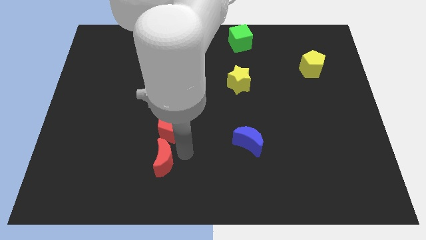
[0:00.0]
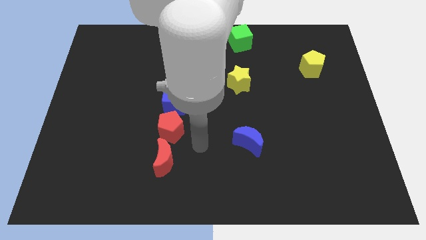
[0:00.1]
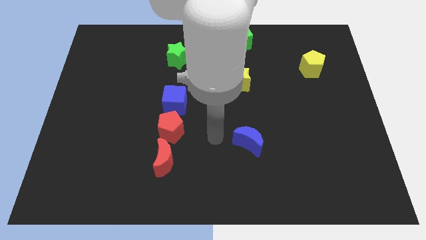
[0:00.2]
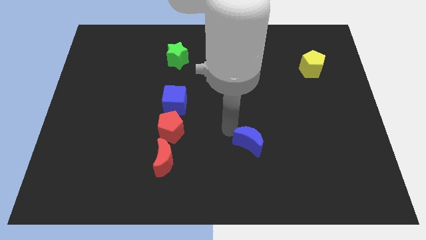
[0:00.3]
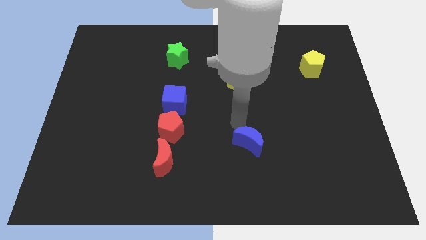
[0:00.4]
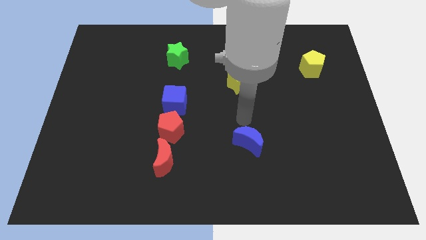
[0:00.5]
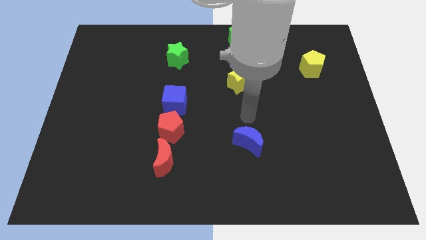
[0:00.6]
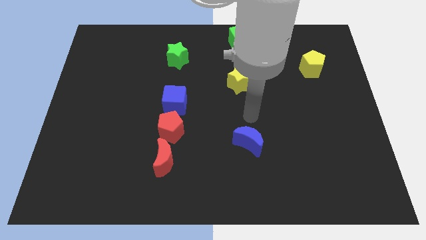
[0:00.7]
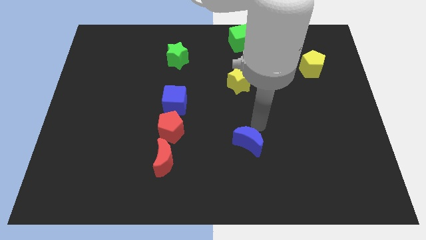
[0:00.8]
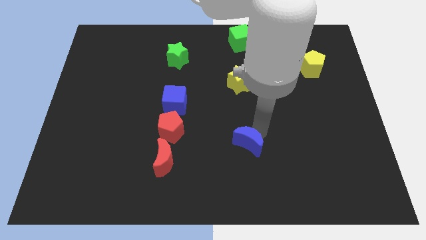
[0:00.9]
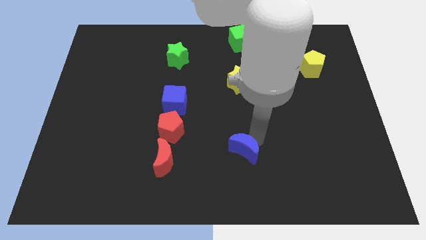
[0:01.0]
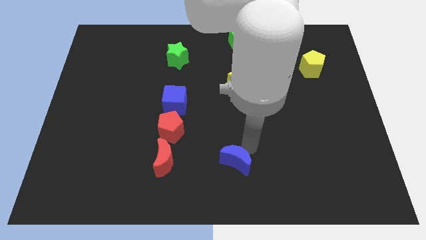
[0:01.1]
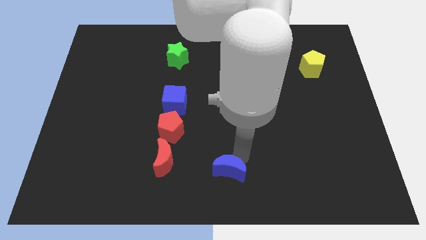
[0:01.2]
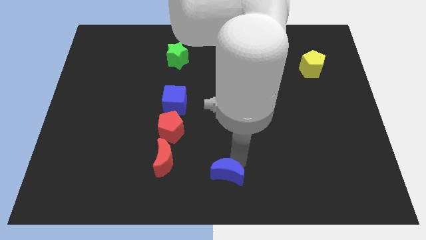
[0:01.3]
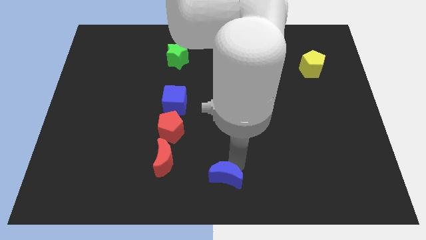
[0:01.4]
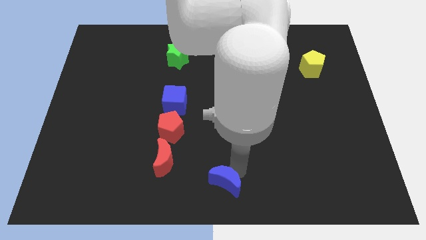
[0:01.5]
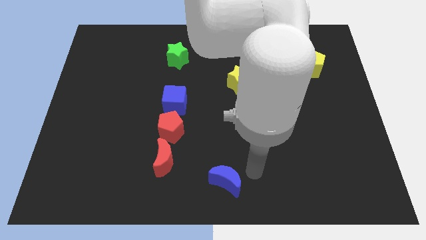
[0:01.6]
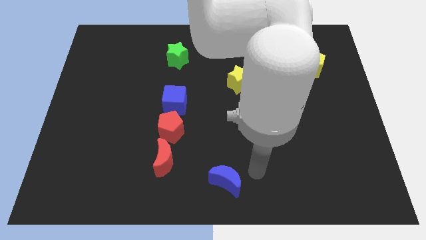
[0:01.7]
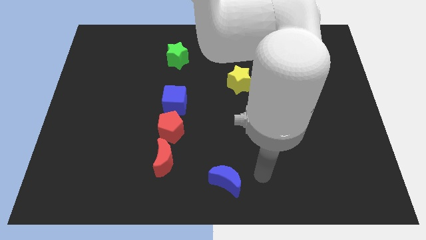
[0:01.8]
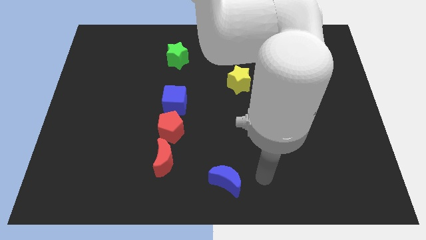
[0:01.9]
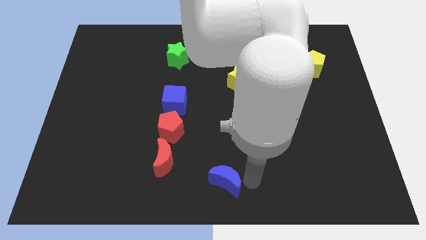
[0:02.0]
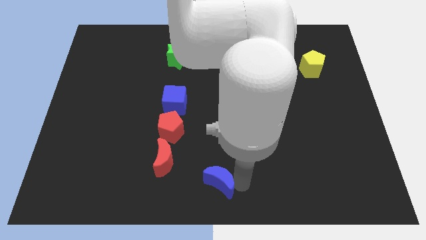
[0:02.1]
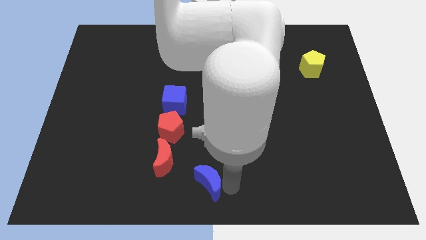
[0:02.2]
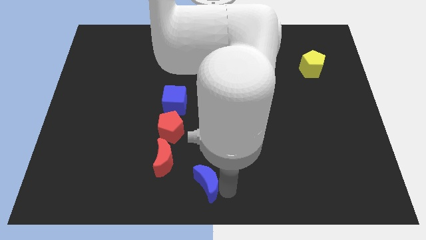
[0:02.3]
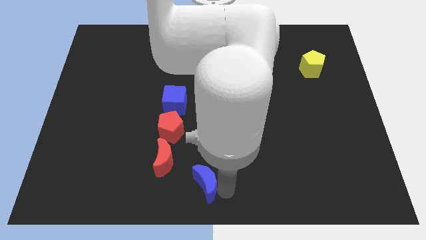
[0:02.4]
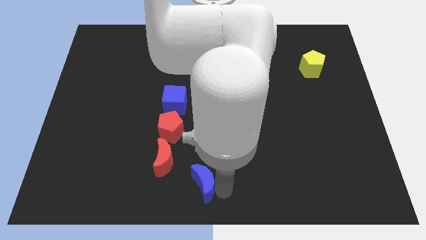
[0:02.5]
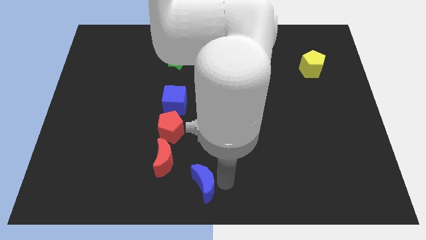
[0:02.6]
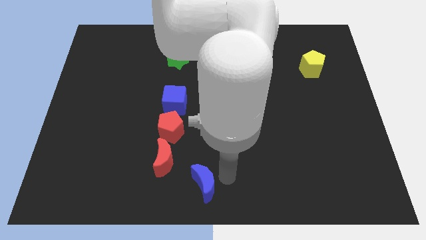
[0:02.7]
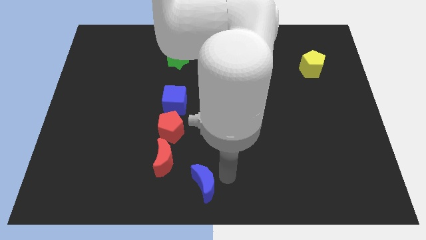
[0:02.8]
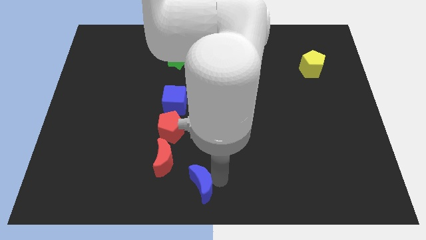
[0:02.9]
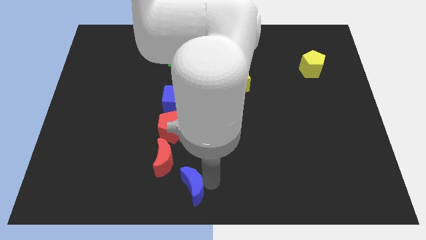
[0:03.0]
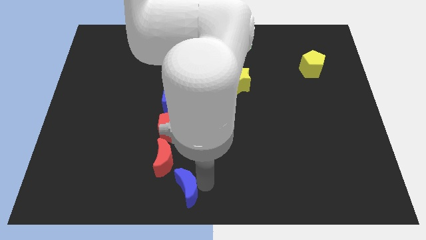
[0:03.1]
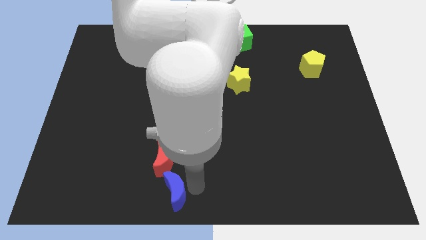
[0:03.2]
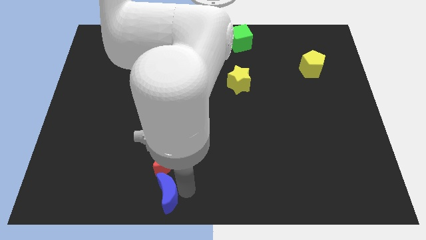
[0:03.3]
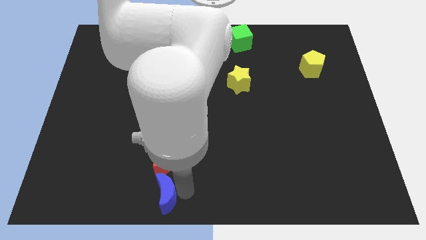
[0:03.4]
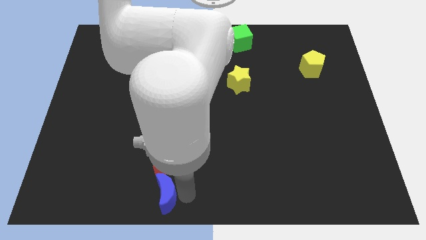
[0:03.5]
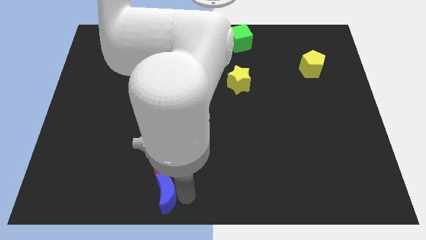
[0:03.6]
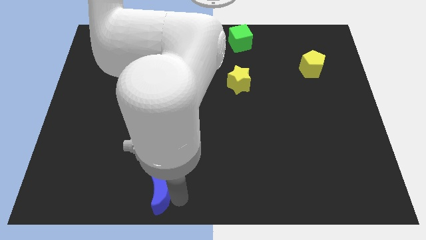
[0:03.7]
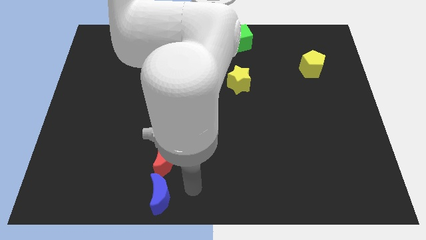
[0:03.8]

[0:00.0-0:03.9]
push the blue crescent to the bottom side of the red crescent

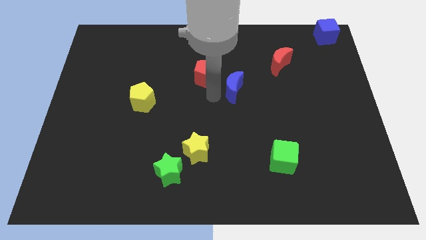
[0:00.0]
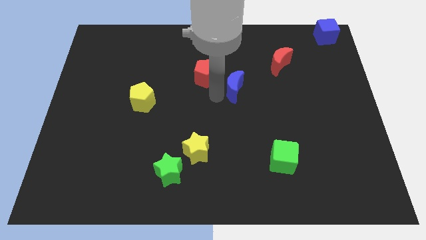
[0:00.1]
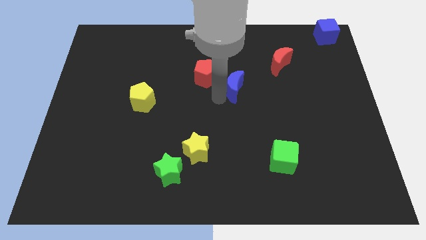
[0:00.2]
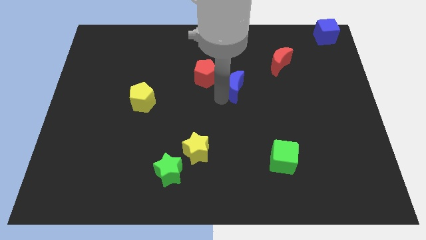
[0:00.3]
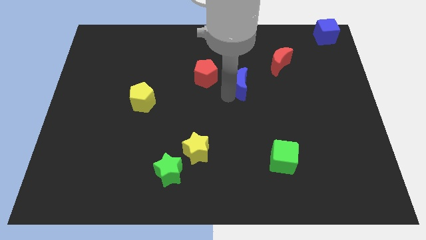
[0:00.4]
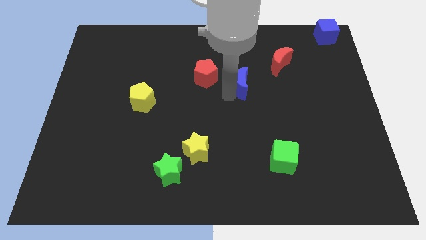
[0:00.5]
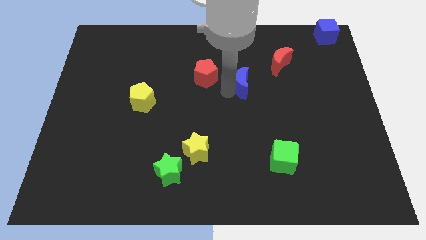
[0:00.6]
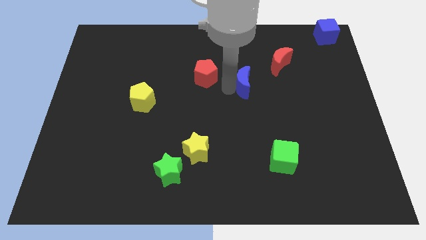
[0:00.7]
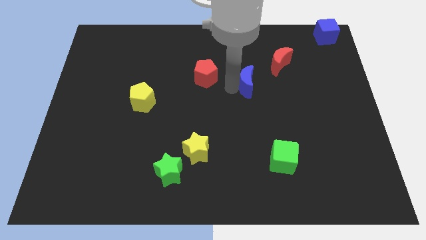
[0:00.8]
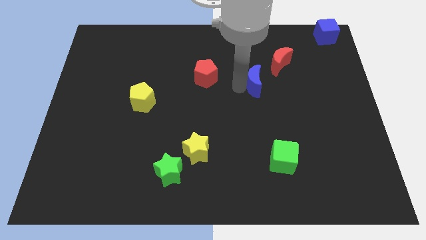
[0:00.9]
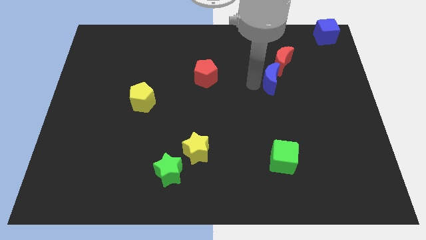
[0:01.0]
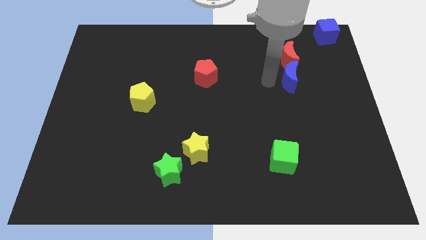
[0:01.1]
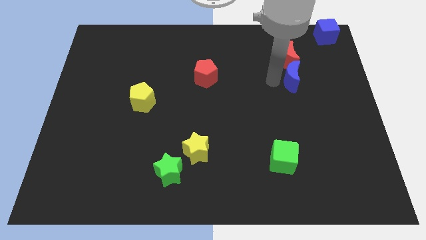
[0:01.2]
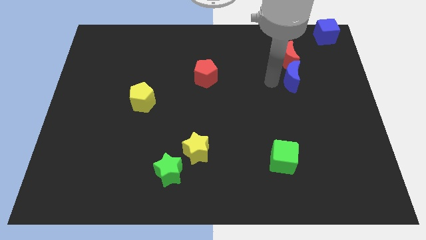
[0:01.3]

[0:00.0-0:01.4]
place the blue moon down to the red moon

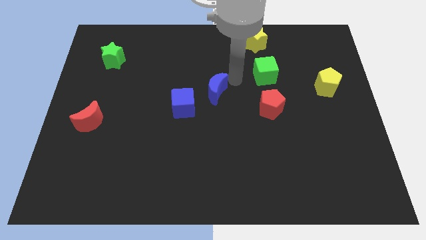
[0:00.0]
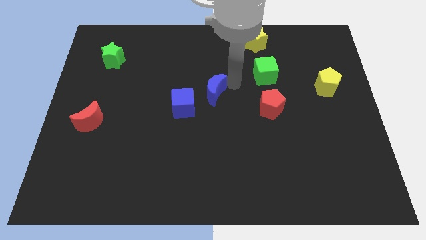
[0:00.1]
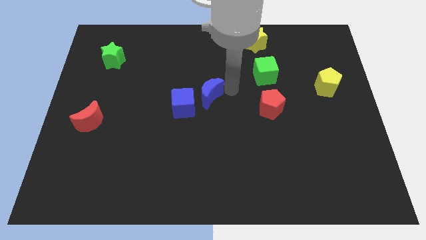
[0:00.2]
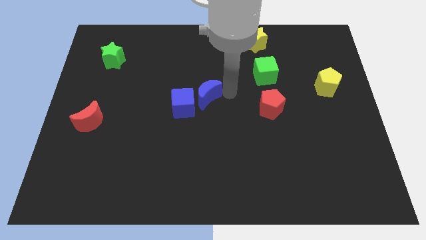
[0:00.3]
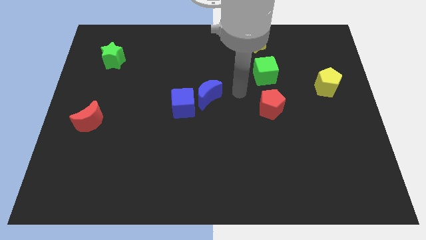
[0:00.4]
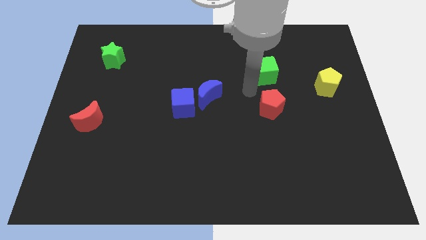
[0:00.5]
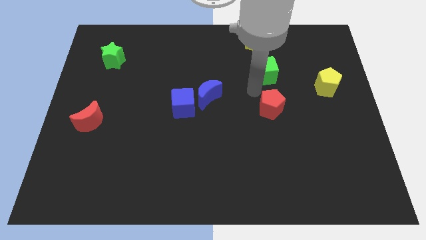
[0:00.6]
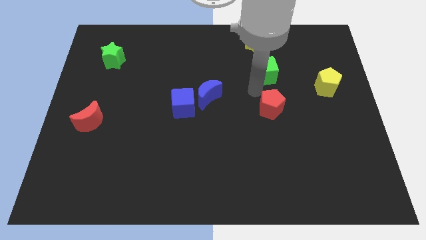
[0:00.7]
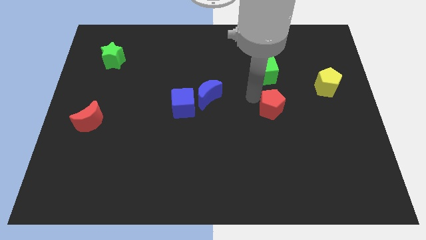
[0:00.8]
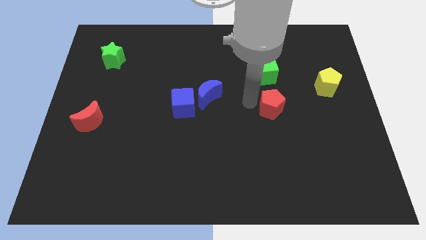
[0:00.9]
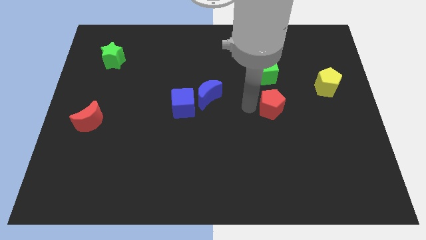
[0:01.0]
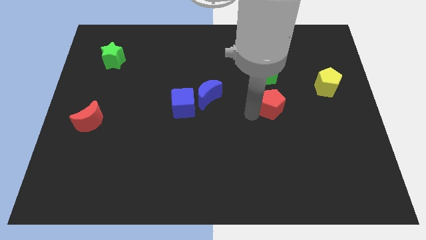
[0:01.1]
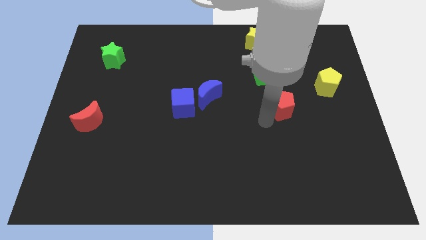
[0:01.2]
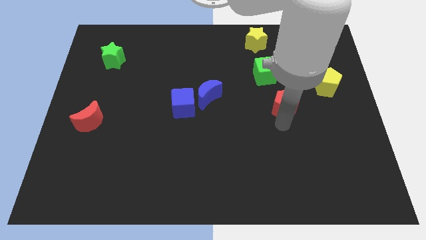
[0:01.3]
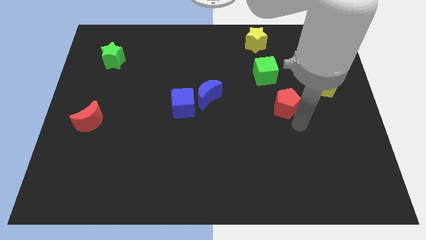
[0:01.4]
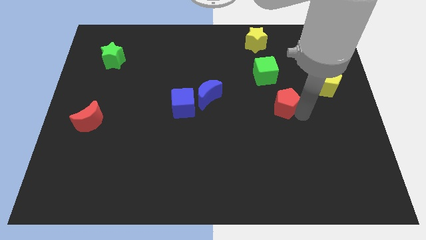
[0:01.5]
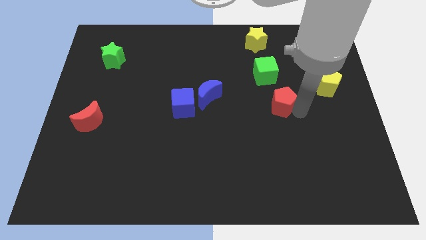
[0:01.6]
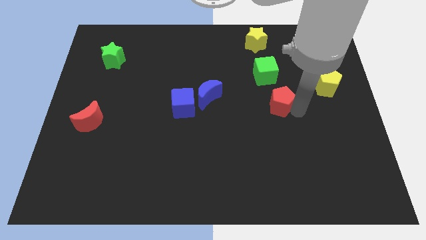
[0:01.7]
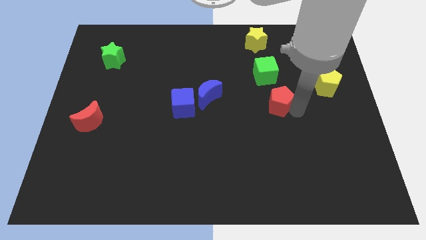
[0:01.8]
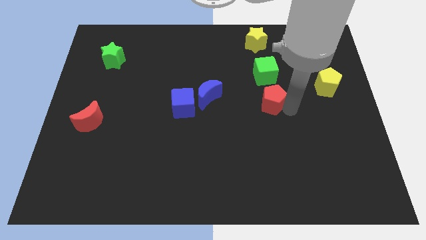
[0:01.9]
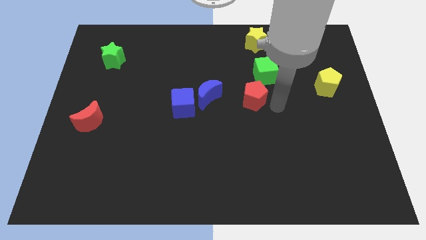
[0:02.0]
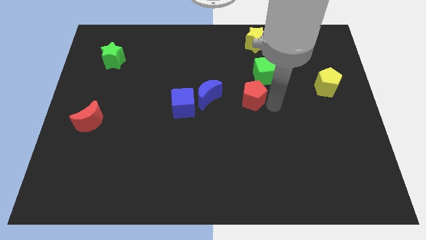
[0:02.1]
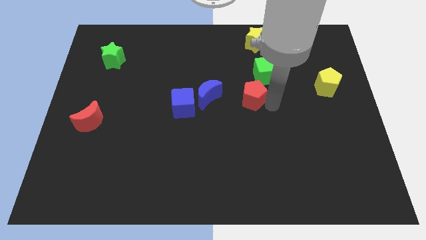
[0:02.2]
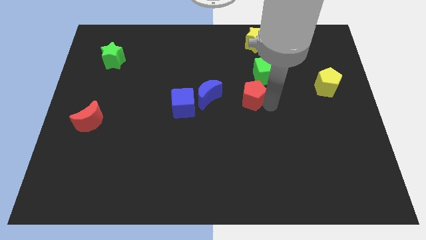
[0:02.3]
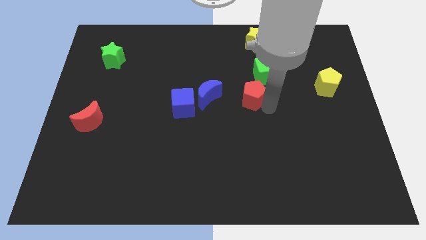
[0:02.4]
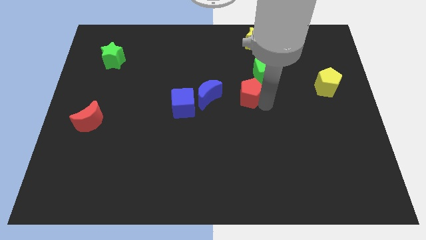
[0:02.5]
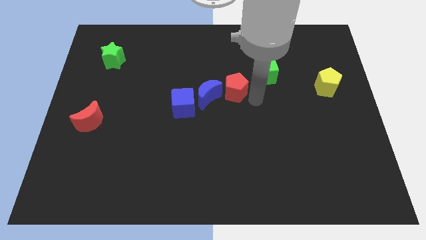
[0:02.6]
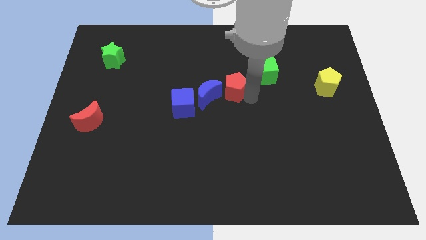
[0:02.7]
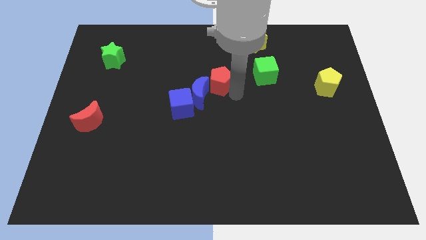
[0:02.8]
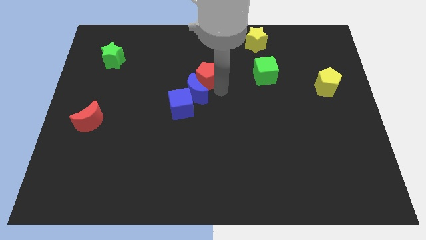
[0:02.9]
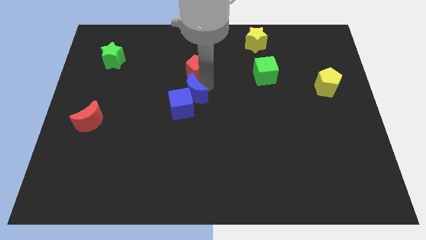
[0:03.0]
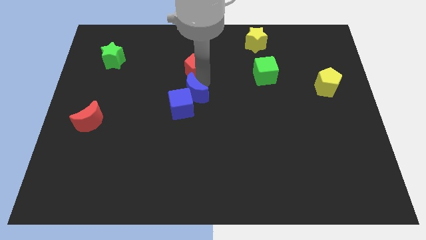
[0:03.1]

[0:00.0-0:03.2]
move the red pentagon above the blue crescent

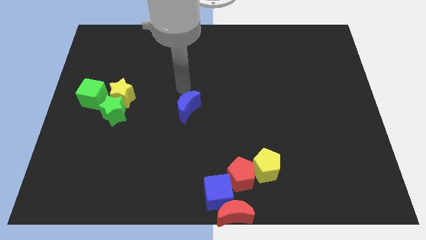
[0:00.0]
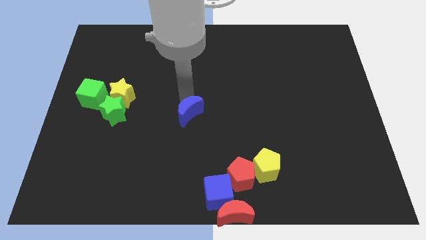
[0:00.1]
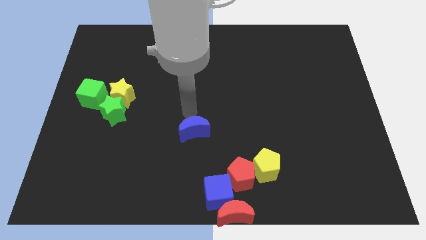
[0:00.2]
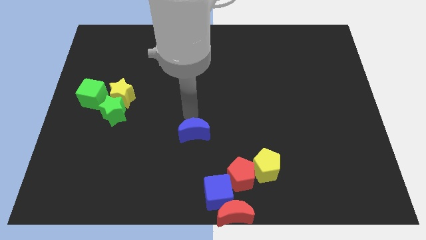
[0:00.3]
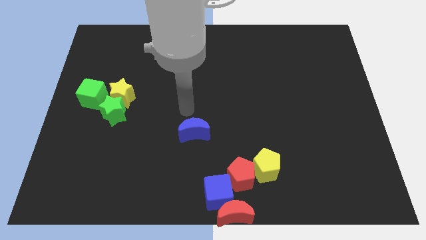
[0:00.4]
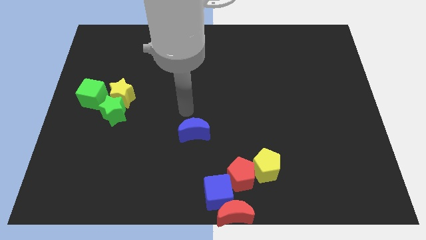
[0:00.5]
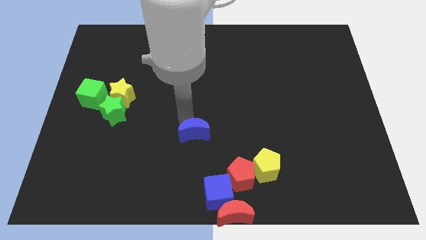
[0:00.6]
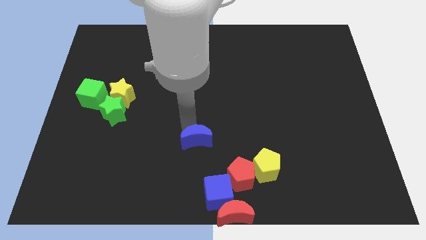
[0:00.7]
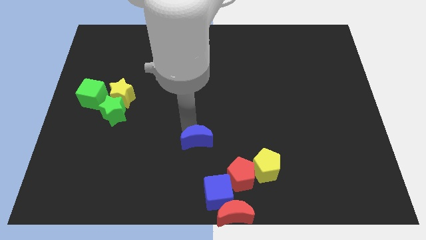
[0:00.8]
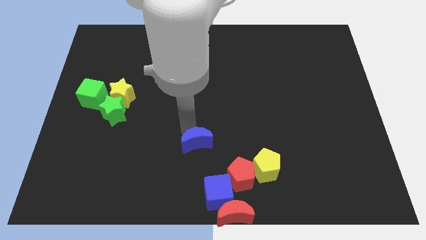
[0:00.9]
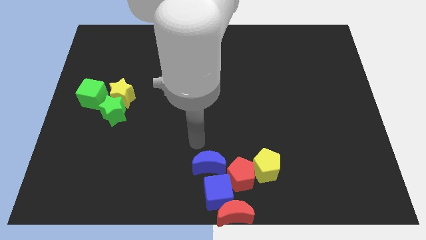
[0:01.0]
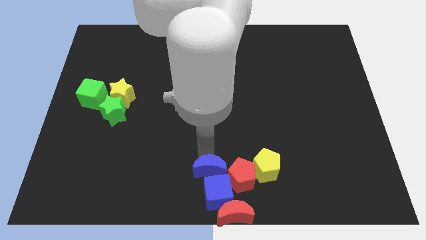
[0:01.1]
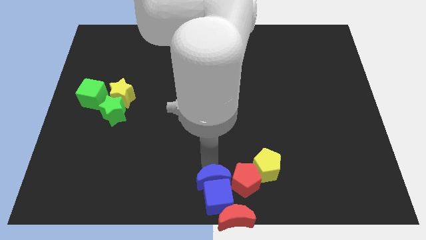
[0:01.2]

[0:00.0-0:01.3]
push the blue moon into the blue cube
